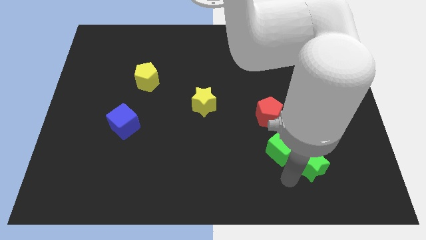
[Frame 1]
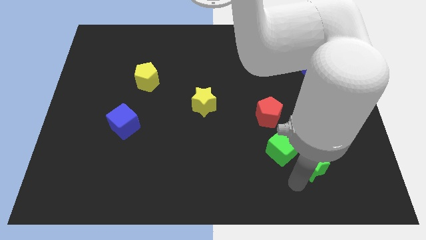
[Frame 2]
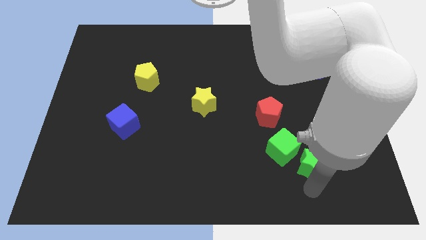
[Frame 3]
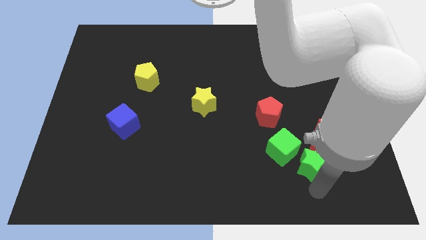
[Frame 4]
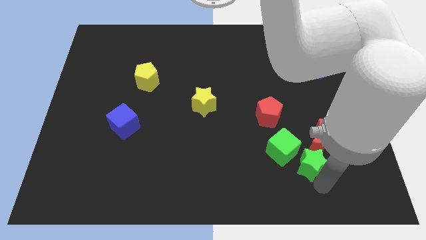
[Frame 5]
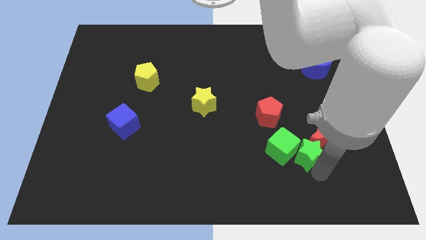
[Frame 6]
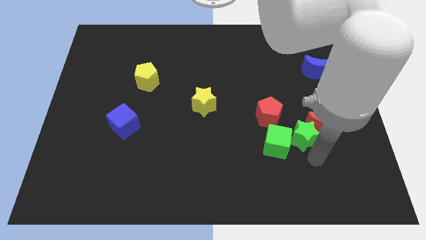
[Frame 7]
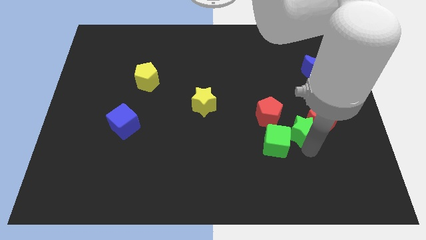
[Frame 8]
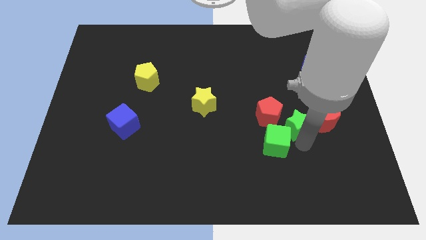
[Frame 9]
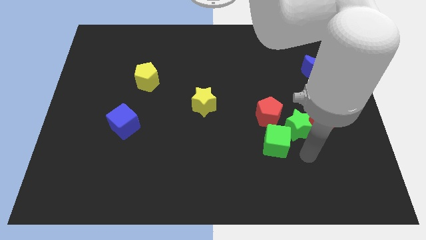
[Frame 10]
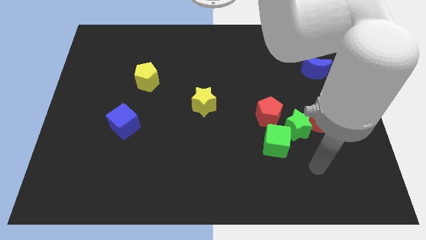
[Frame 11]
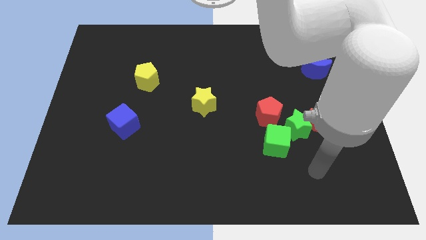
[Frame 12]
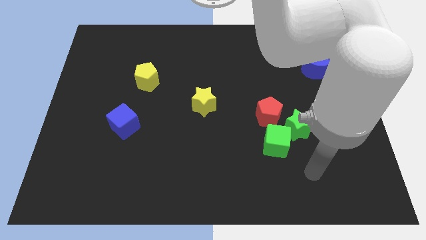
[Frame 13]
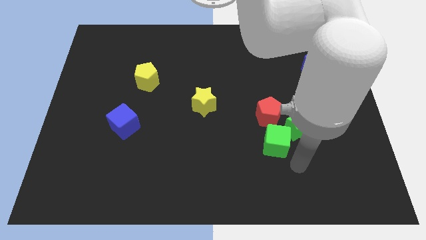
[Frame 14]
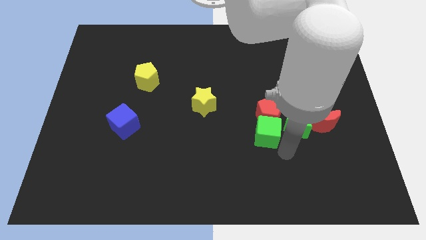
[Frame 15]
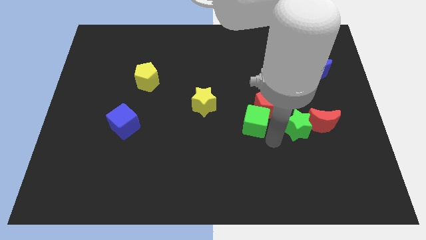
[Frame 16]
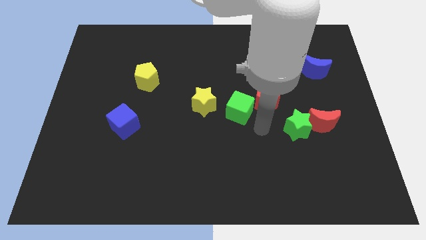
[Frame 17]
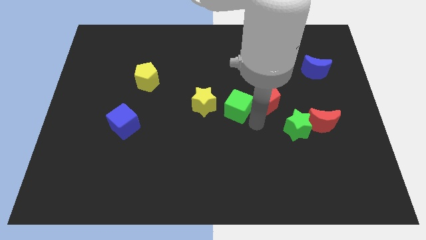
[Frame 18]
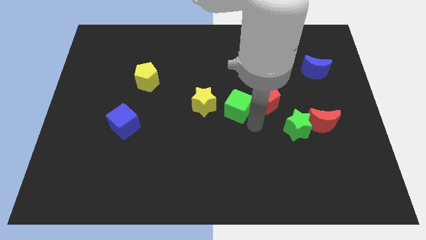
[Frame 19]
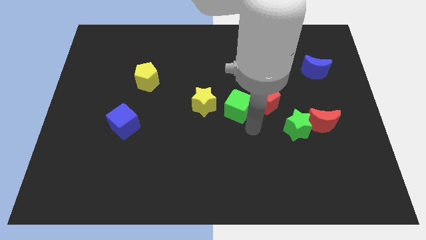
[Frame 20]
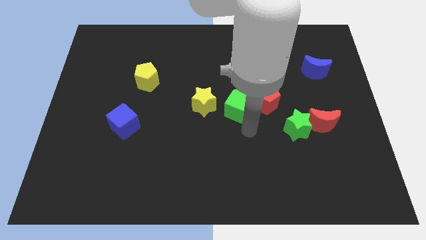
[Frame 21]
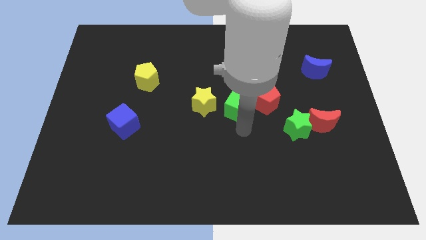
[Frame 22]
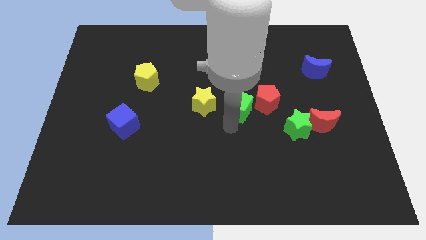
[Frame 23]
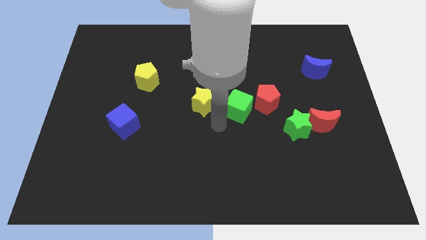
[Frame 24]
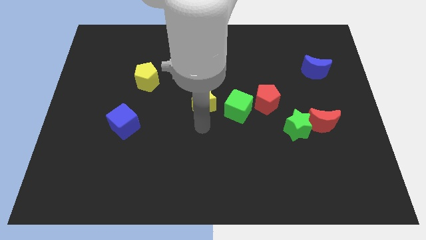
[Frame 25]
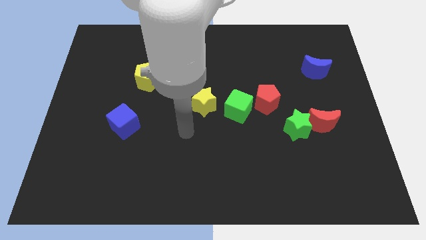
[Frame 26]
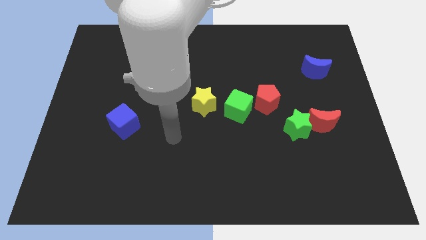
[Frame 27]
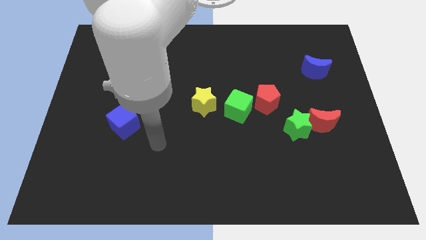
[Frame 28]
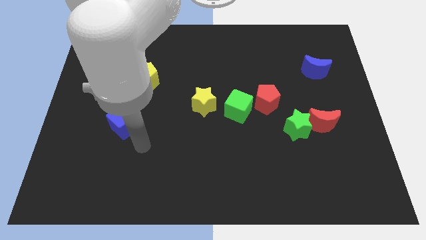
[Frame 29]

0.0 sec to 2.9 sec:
place the green cube in between the yellow star and red pentagon

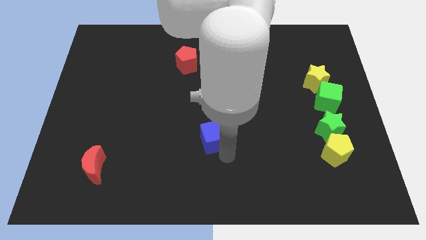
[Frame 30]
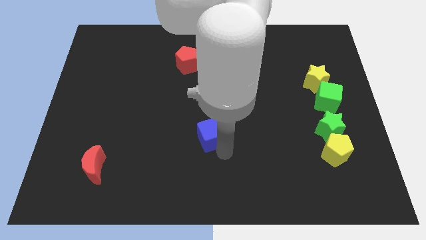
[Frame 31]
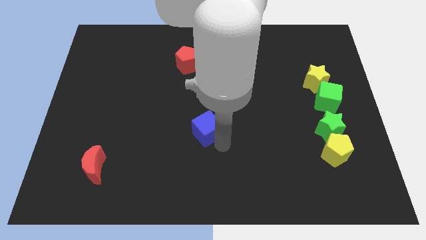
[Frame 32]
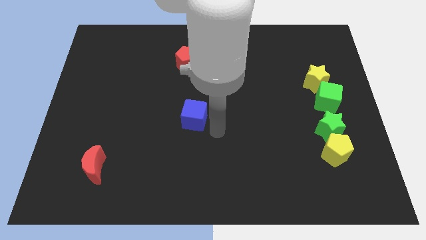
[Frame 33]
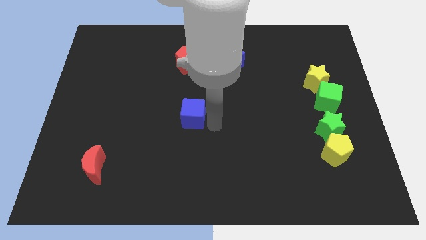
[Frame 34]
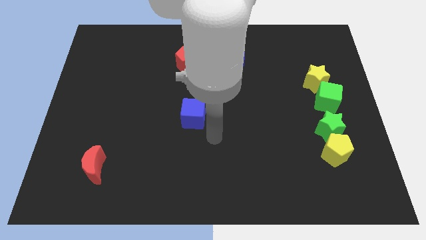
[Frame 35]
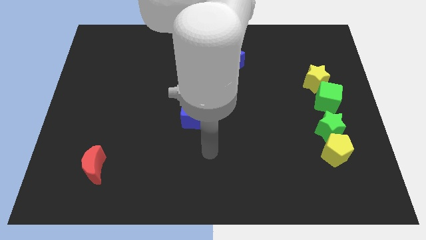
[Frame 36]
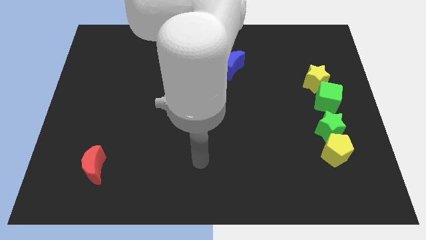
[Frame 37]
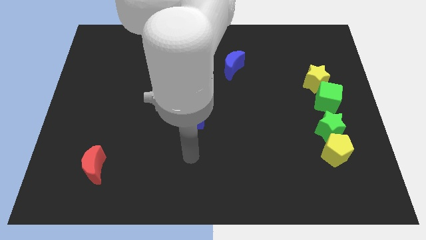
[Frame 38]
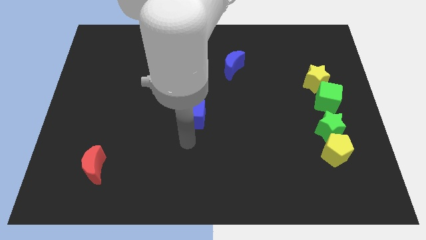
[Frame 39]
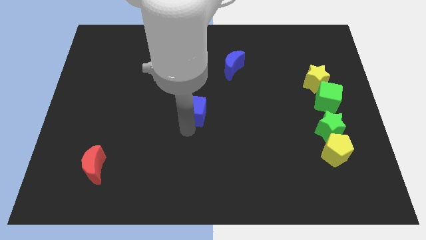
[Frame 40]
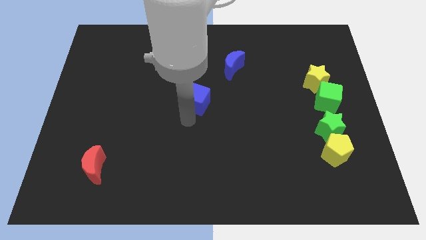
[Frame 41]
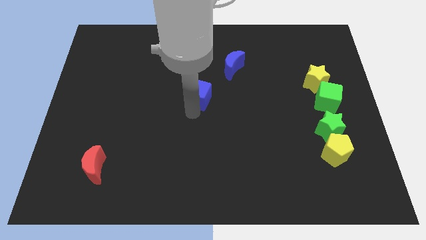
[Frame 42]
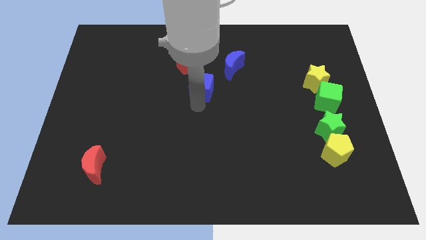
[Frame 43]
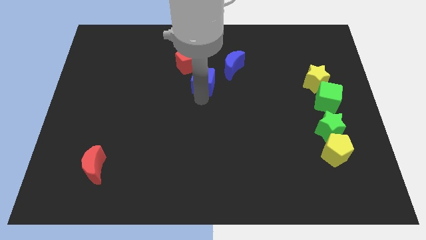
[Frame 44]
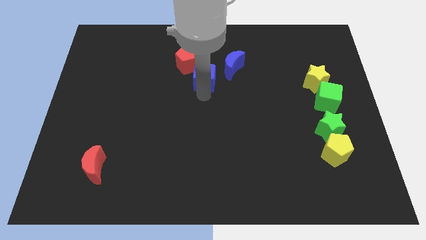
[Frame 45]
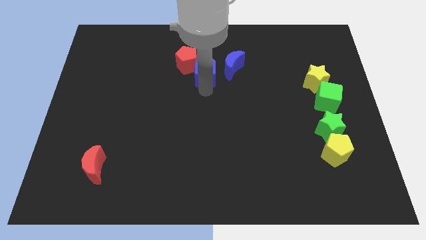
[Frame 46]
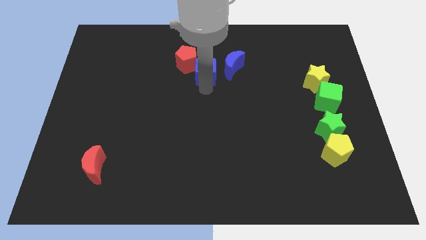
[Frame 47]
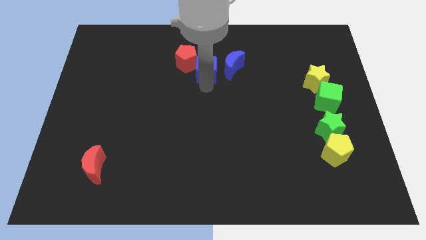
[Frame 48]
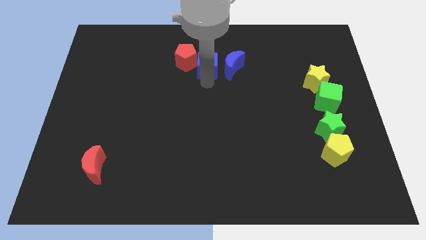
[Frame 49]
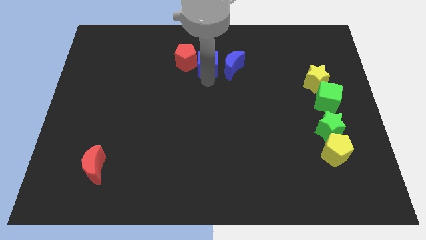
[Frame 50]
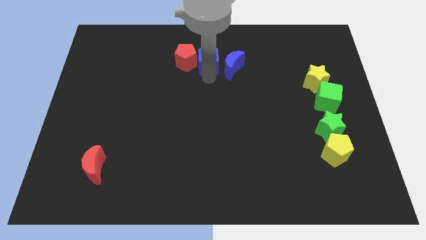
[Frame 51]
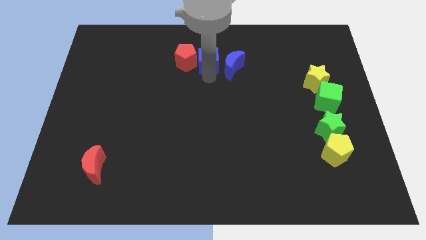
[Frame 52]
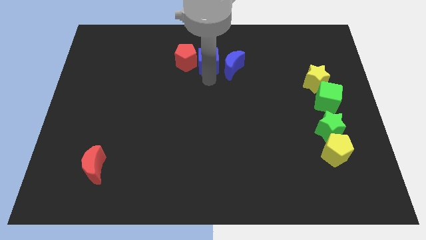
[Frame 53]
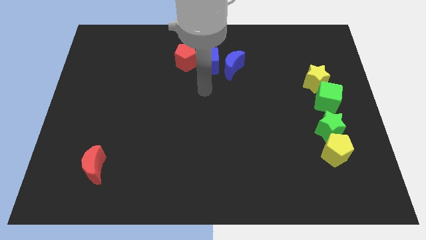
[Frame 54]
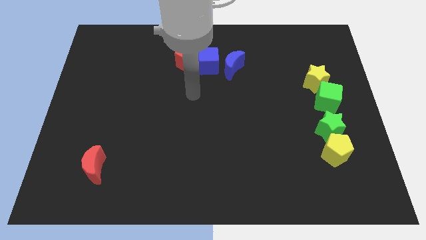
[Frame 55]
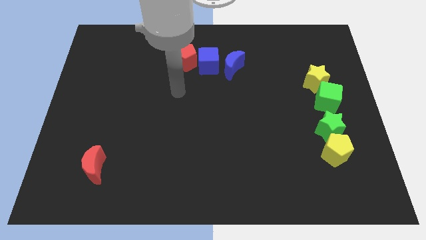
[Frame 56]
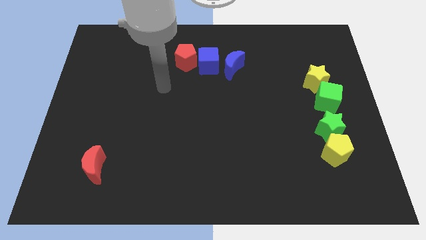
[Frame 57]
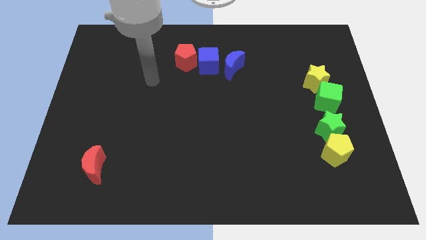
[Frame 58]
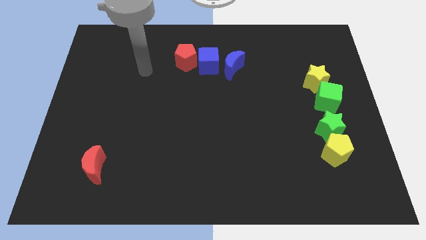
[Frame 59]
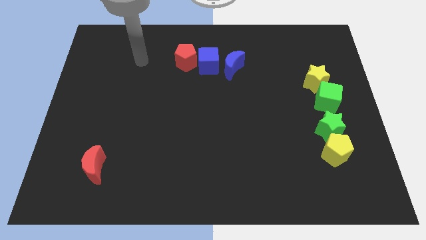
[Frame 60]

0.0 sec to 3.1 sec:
put the blue cube to the right of the red pentagon

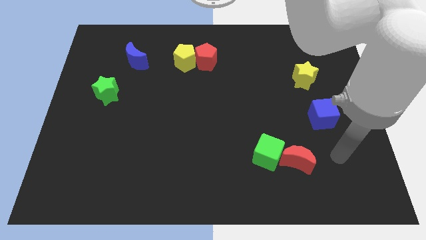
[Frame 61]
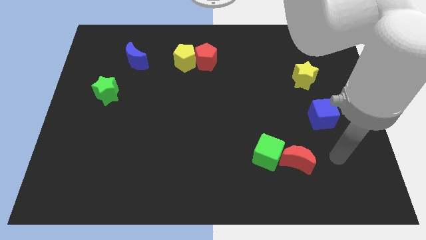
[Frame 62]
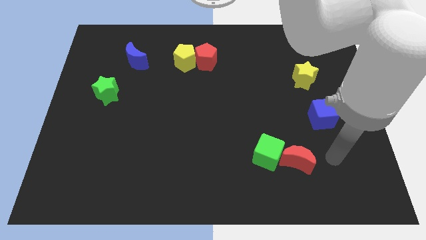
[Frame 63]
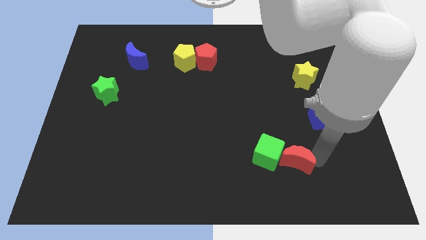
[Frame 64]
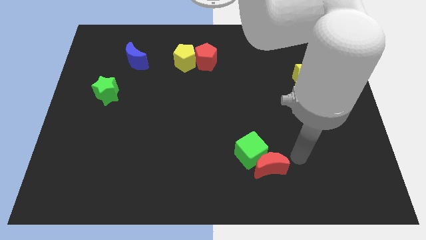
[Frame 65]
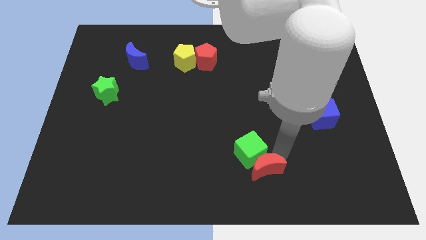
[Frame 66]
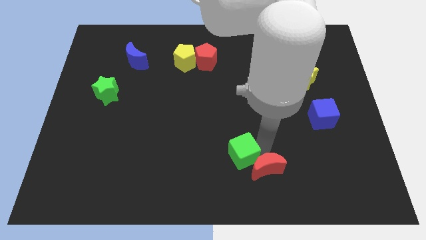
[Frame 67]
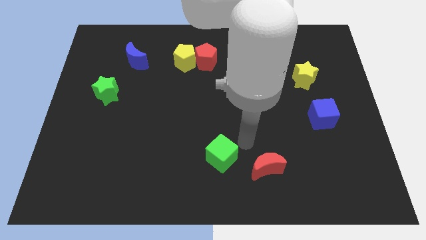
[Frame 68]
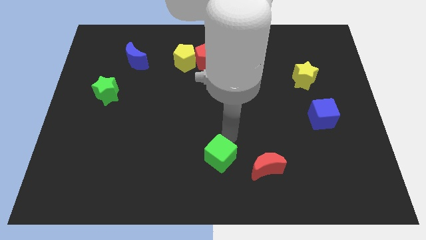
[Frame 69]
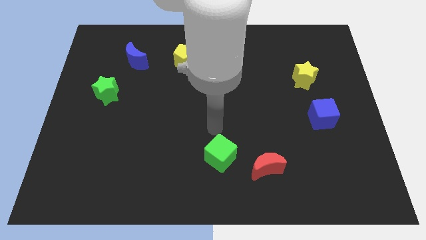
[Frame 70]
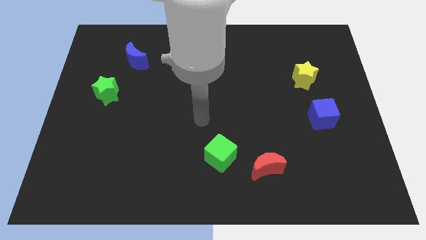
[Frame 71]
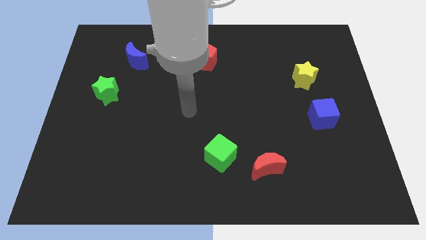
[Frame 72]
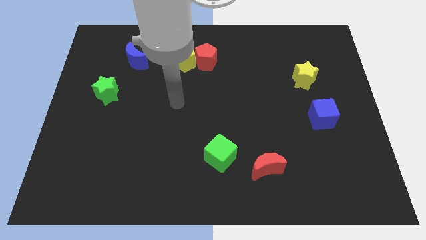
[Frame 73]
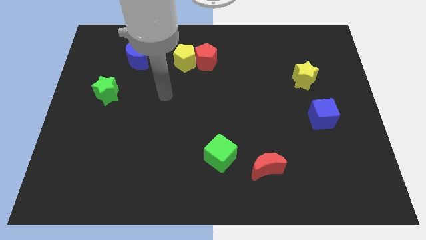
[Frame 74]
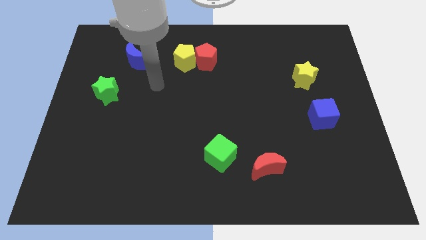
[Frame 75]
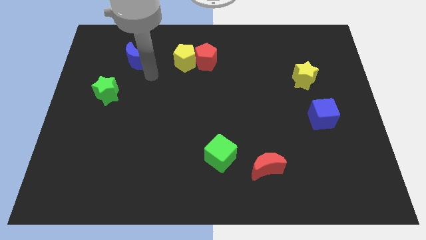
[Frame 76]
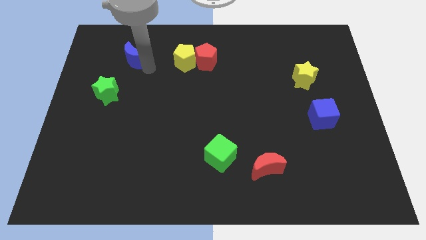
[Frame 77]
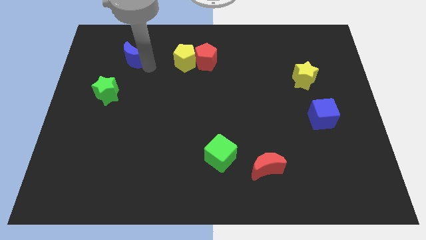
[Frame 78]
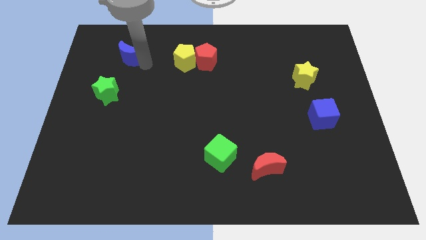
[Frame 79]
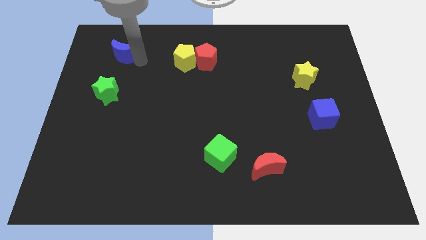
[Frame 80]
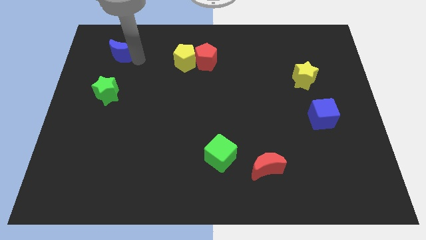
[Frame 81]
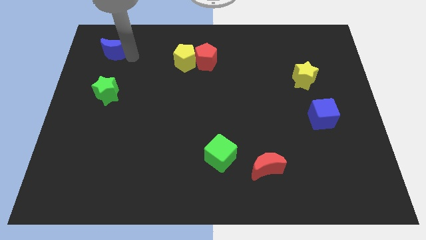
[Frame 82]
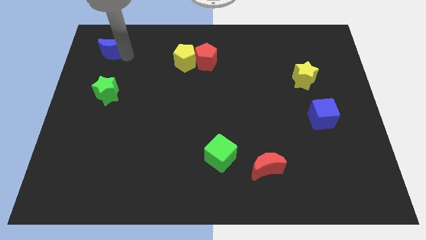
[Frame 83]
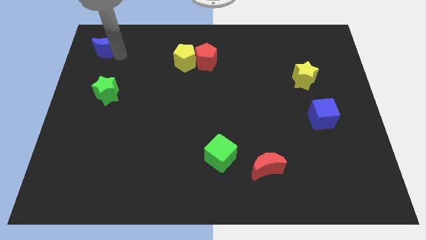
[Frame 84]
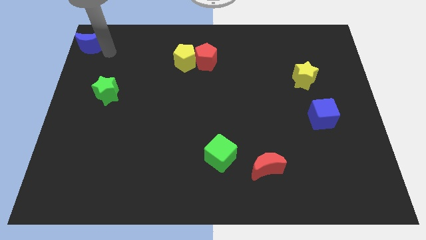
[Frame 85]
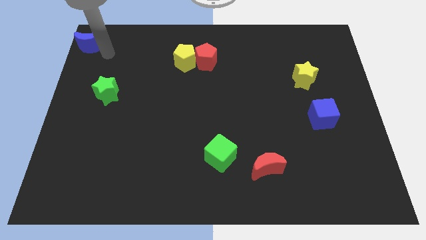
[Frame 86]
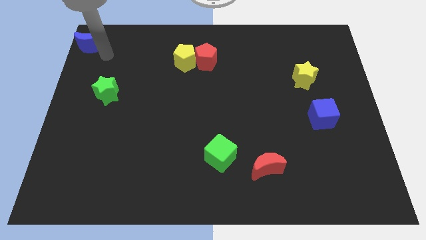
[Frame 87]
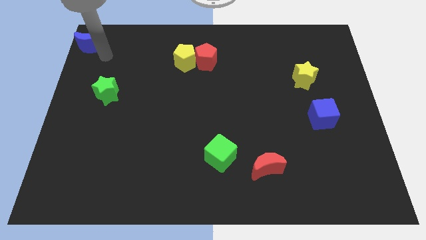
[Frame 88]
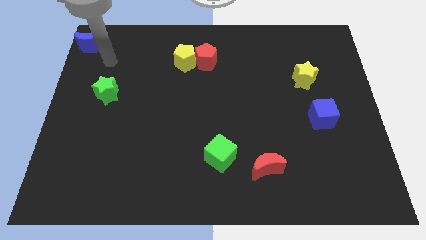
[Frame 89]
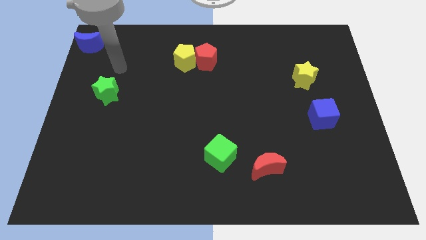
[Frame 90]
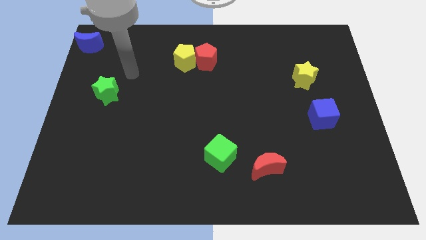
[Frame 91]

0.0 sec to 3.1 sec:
push the blue moon to the top left corner of the board
